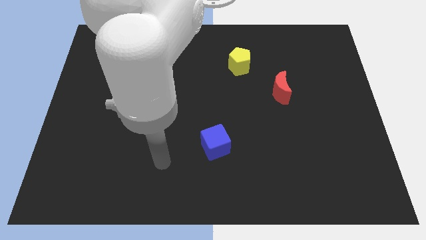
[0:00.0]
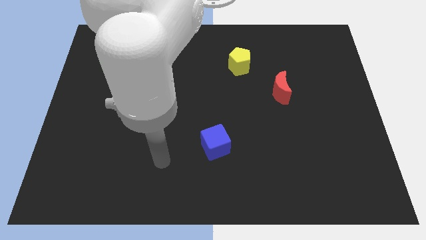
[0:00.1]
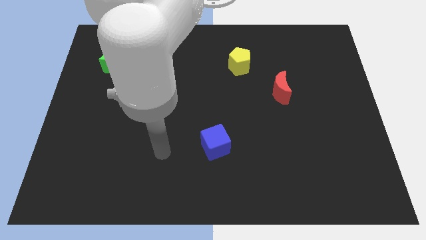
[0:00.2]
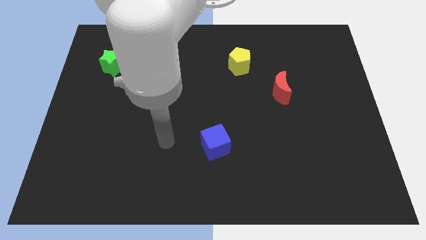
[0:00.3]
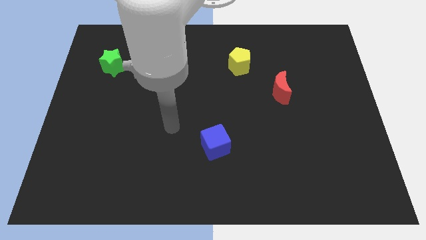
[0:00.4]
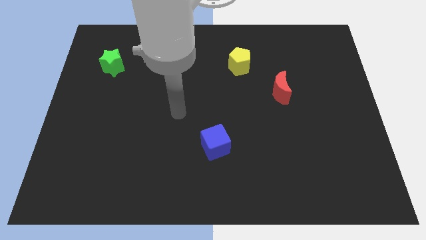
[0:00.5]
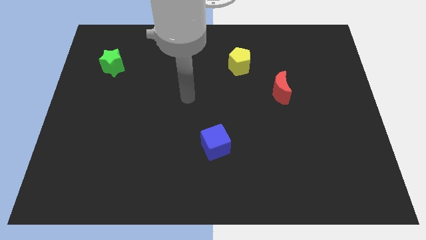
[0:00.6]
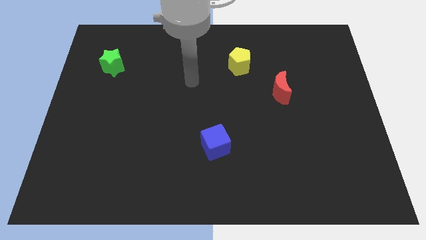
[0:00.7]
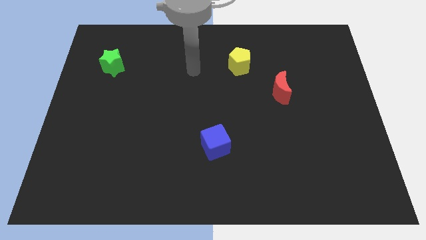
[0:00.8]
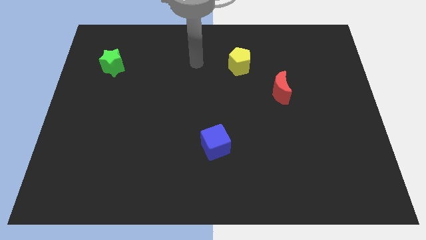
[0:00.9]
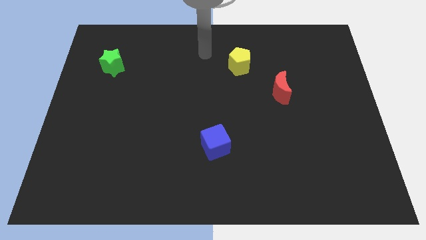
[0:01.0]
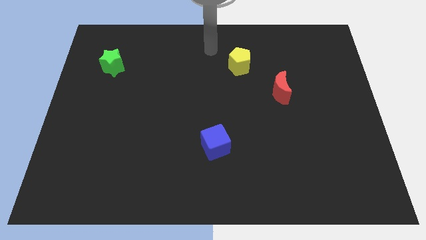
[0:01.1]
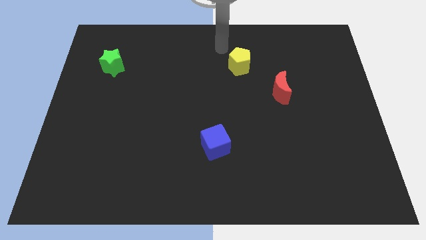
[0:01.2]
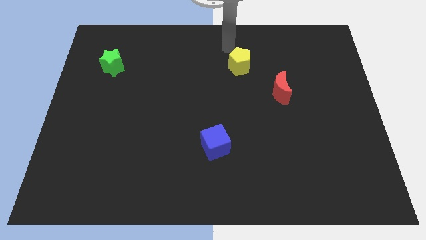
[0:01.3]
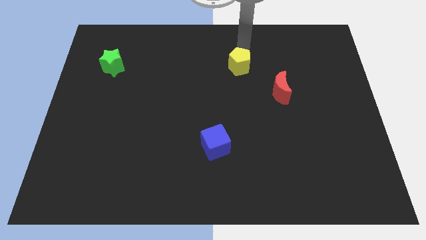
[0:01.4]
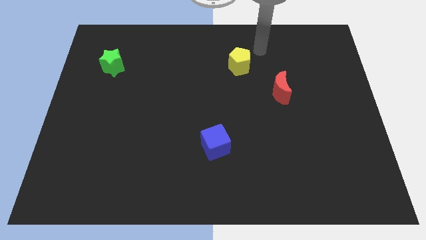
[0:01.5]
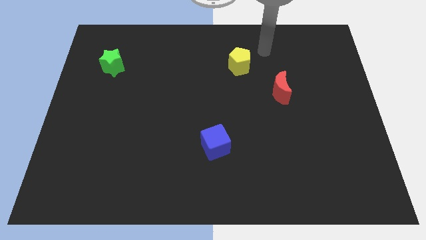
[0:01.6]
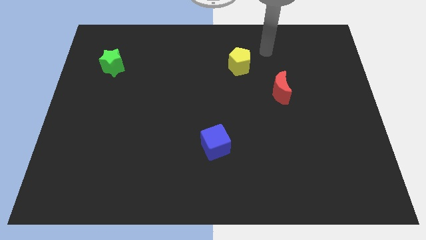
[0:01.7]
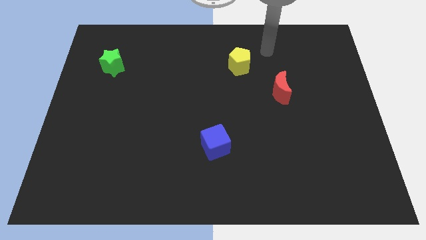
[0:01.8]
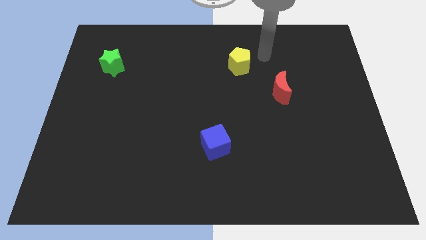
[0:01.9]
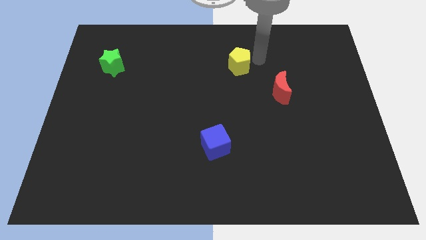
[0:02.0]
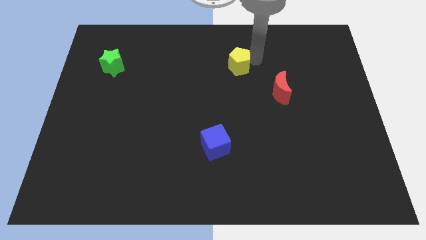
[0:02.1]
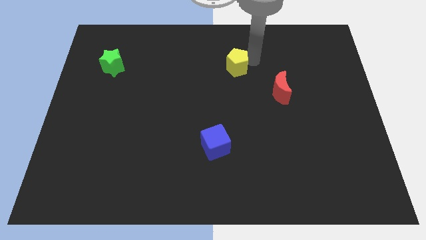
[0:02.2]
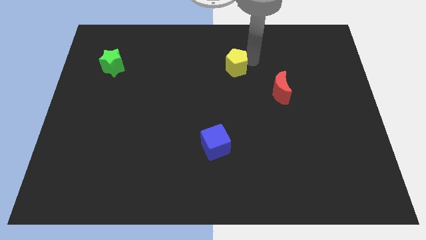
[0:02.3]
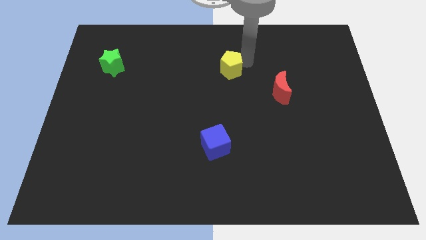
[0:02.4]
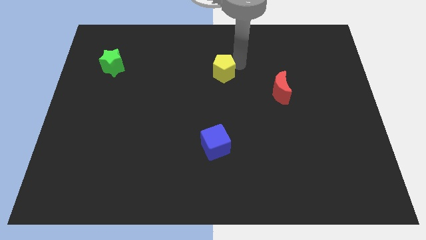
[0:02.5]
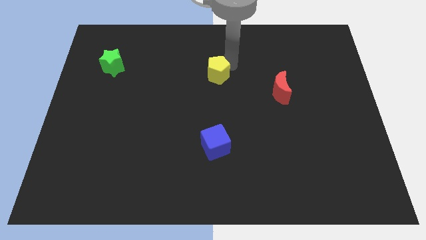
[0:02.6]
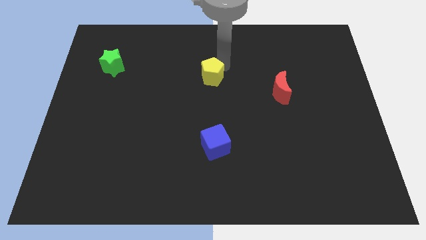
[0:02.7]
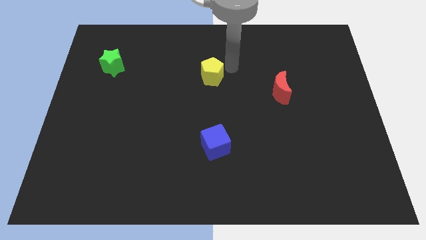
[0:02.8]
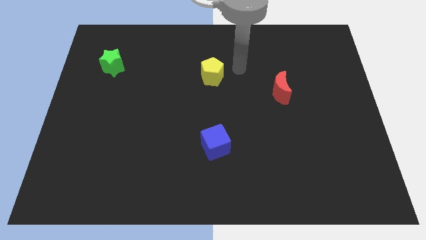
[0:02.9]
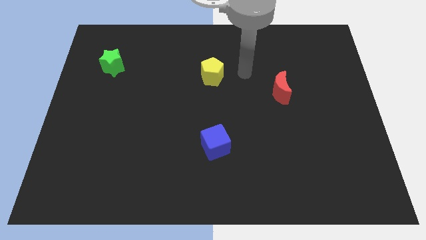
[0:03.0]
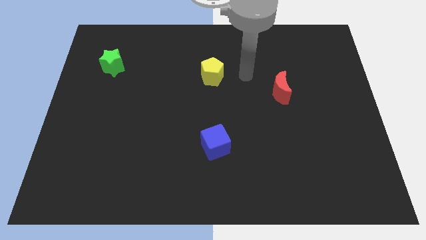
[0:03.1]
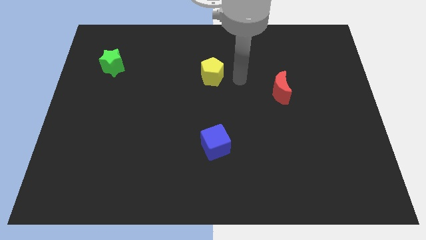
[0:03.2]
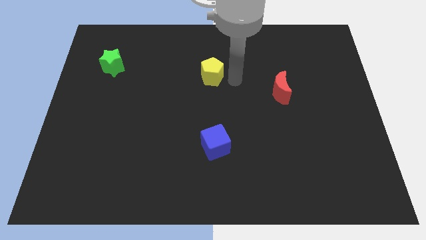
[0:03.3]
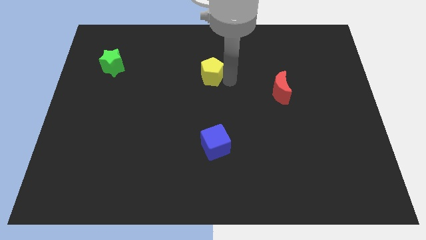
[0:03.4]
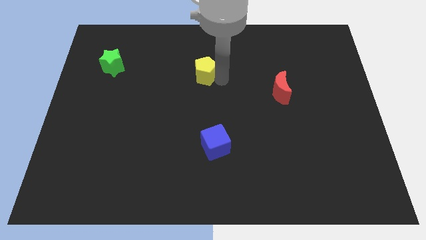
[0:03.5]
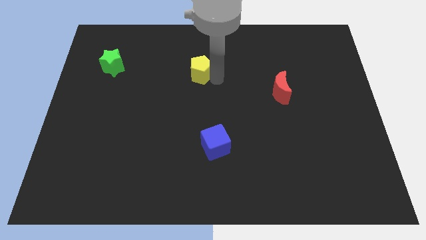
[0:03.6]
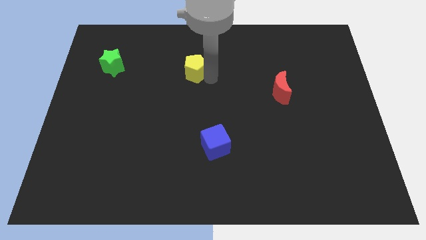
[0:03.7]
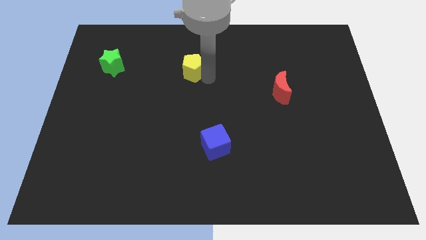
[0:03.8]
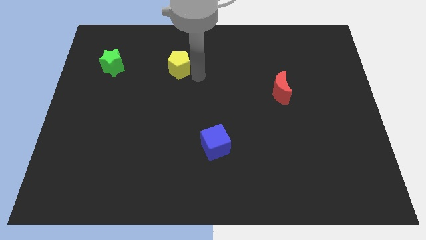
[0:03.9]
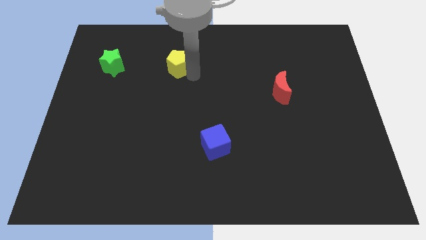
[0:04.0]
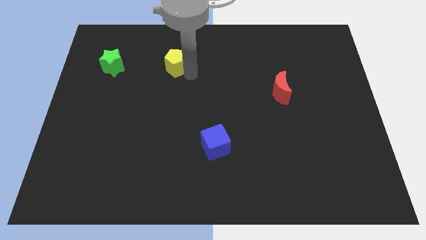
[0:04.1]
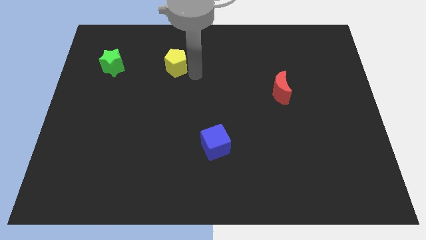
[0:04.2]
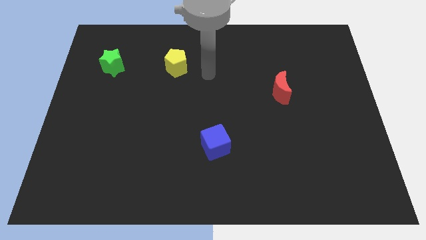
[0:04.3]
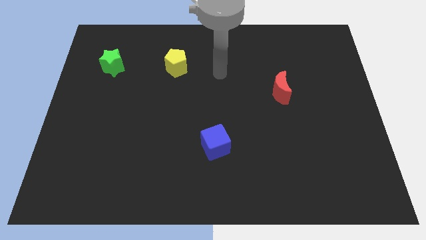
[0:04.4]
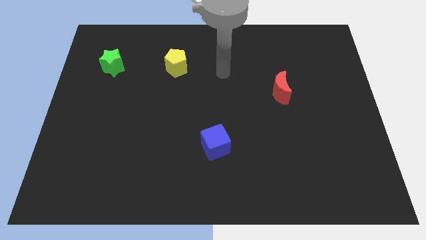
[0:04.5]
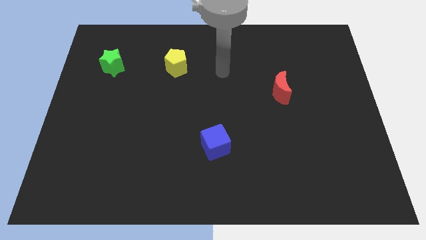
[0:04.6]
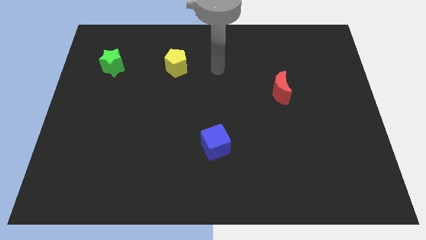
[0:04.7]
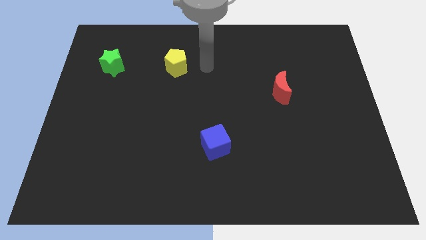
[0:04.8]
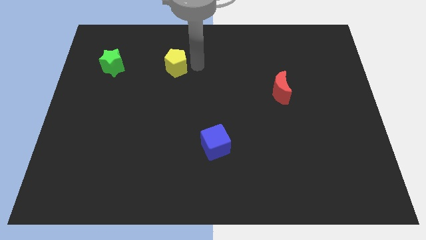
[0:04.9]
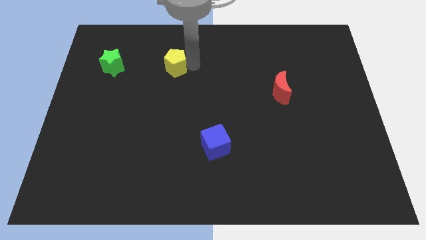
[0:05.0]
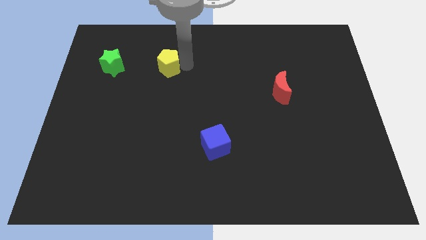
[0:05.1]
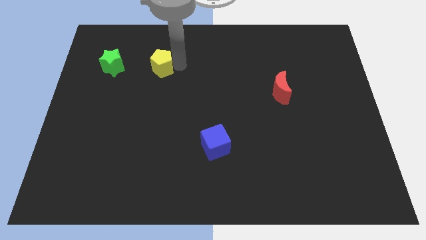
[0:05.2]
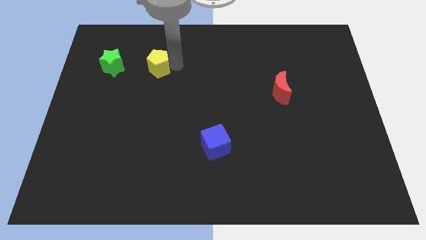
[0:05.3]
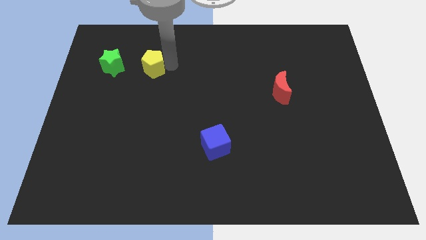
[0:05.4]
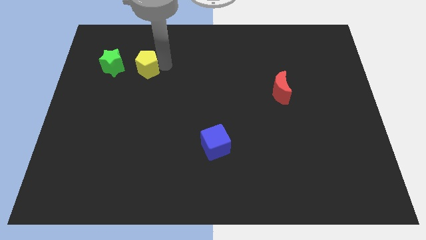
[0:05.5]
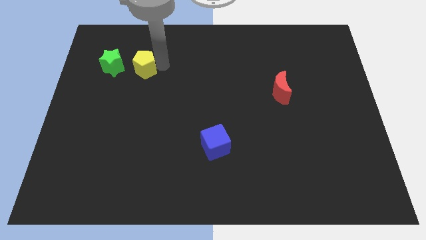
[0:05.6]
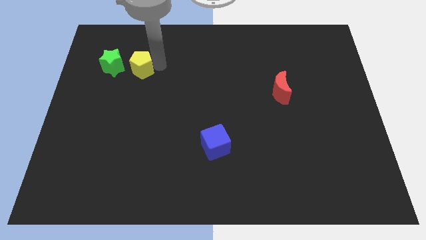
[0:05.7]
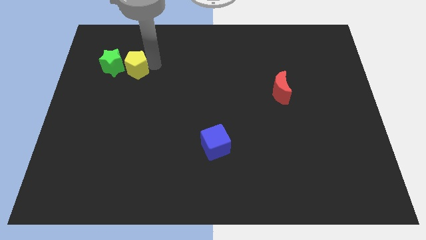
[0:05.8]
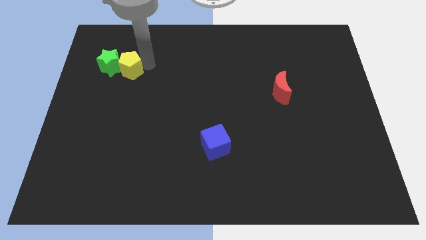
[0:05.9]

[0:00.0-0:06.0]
push the yellow block next to the star

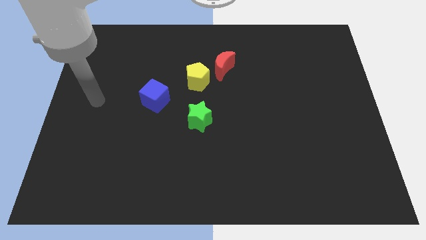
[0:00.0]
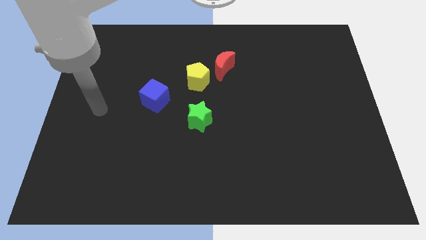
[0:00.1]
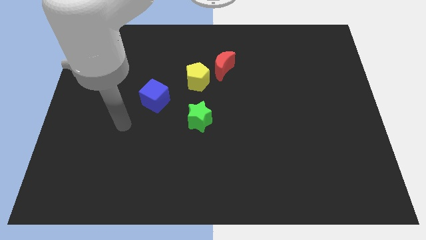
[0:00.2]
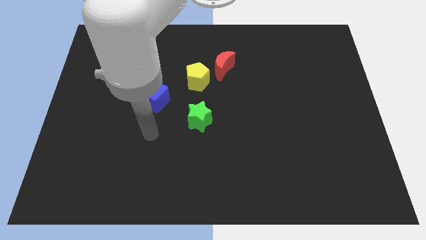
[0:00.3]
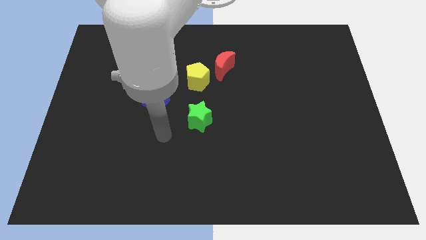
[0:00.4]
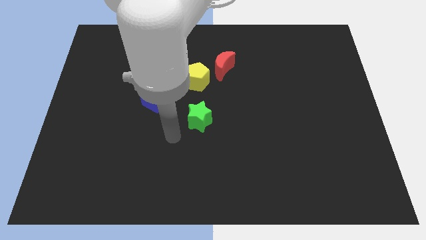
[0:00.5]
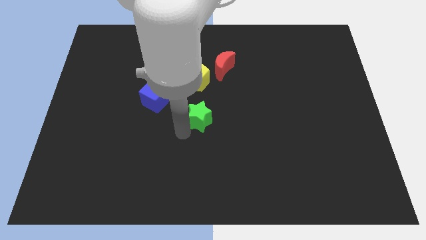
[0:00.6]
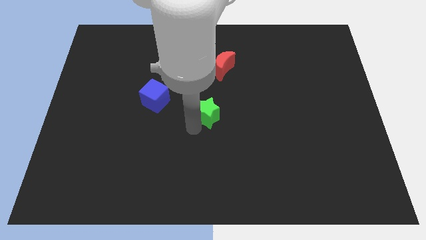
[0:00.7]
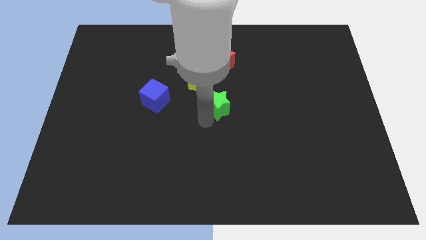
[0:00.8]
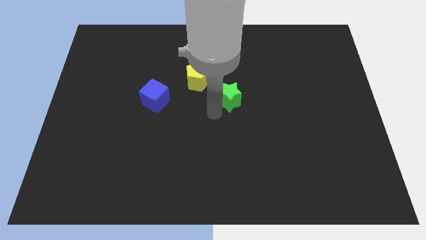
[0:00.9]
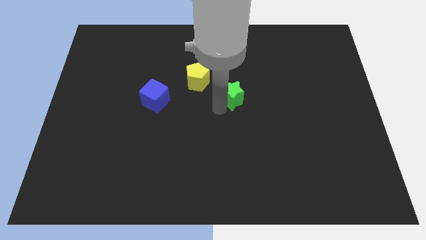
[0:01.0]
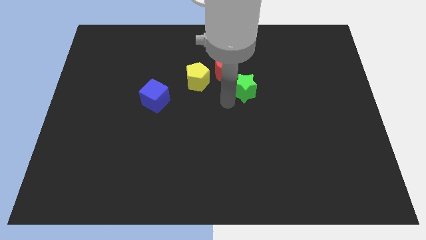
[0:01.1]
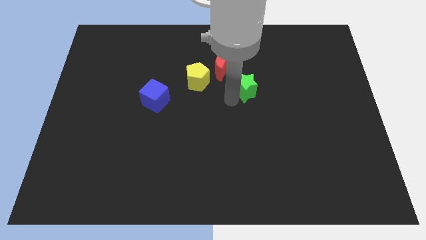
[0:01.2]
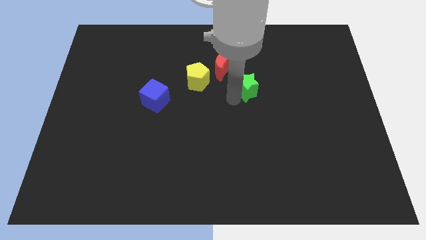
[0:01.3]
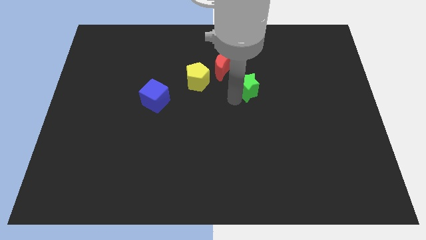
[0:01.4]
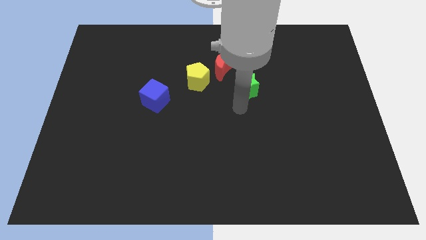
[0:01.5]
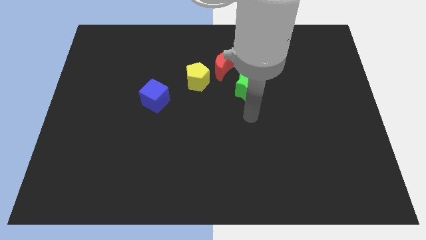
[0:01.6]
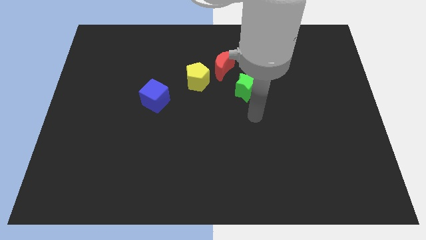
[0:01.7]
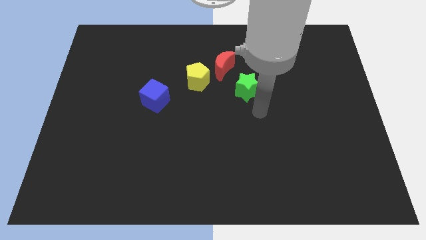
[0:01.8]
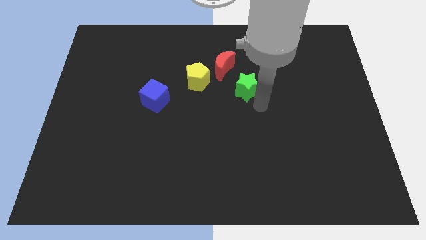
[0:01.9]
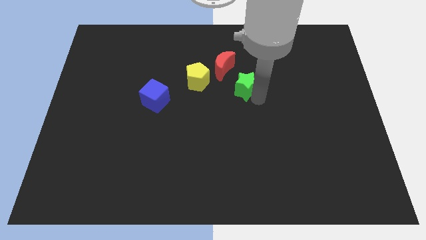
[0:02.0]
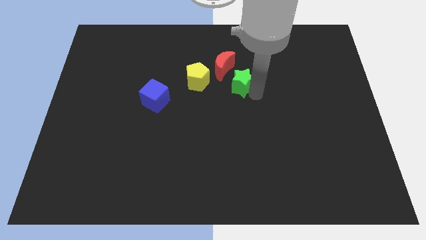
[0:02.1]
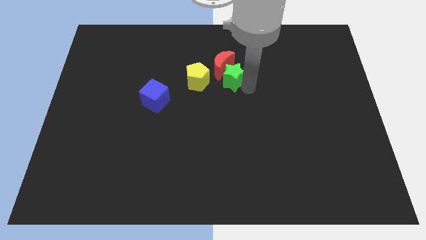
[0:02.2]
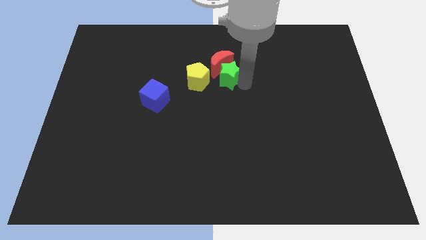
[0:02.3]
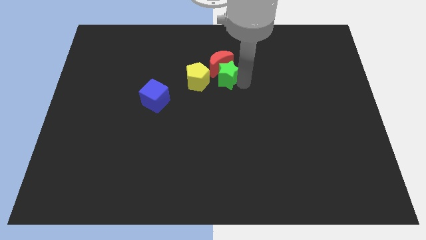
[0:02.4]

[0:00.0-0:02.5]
push the green star close to the red moon
